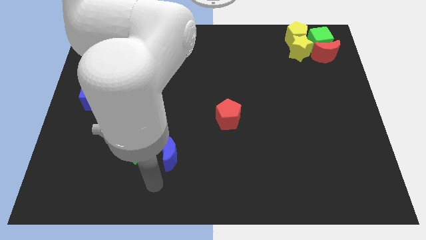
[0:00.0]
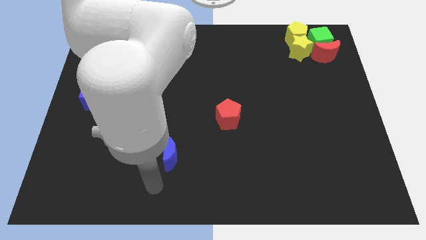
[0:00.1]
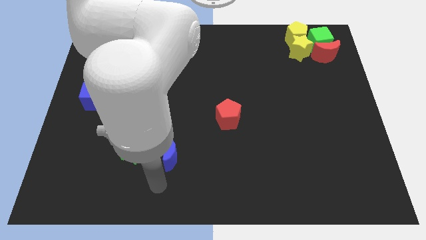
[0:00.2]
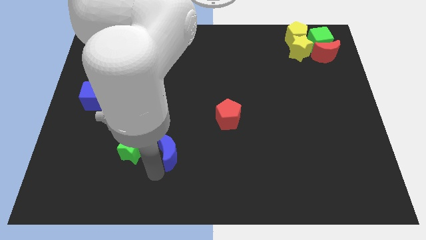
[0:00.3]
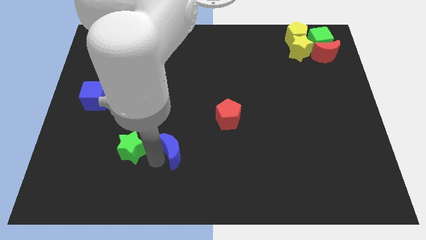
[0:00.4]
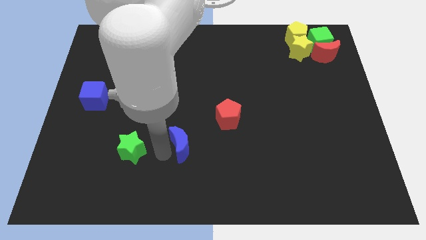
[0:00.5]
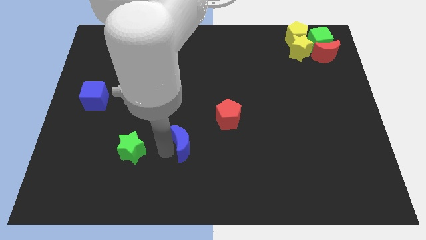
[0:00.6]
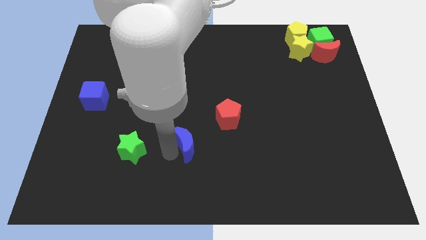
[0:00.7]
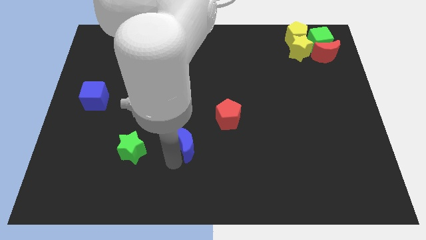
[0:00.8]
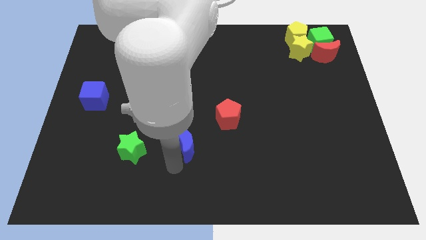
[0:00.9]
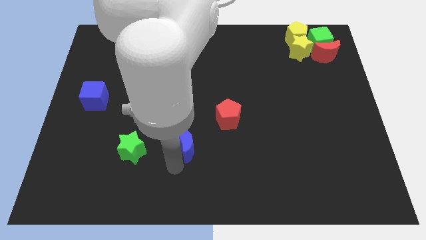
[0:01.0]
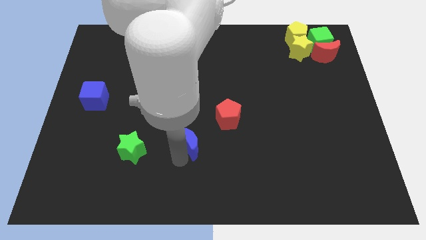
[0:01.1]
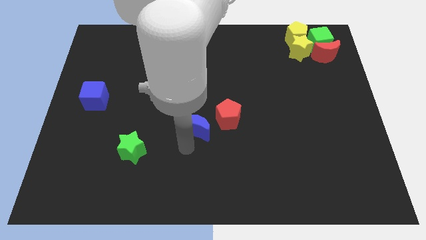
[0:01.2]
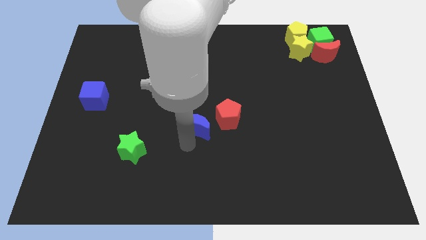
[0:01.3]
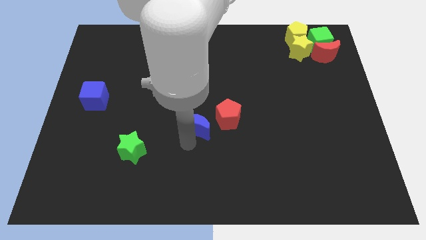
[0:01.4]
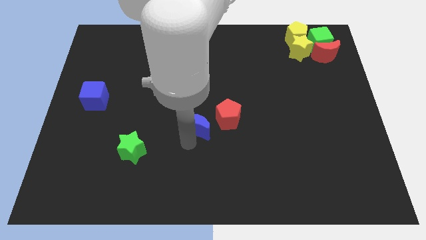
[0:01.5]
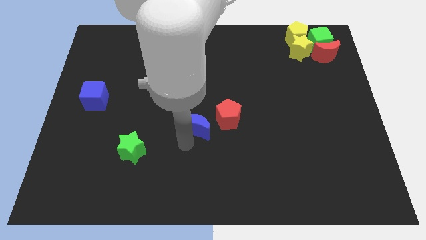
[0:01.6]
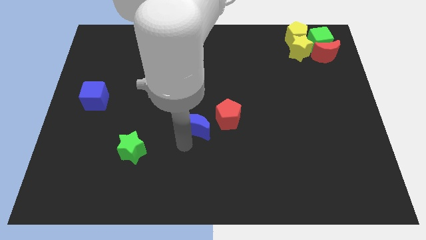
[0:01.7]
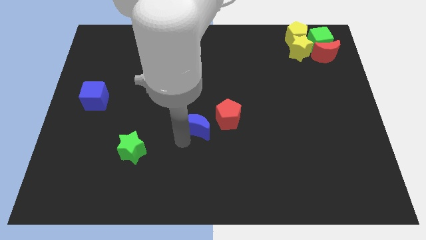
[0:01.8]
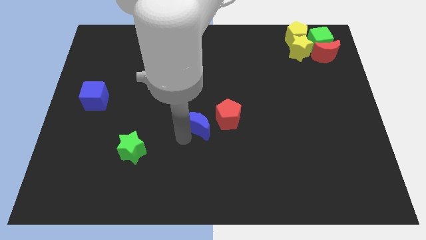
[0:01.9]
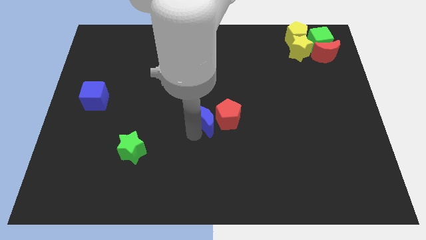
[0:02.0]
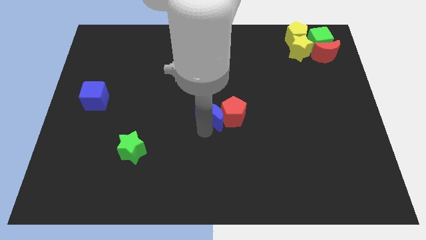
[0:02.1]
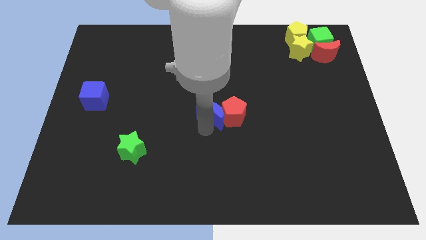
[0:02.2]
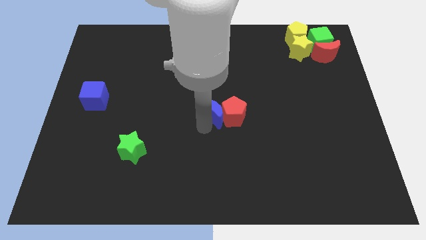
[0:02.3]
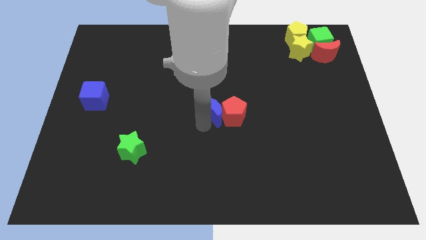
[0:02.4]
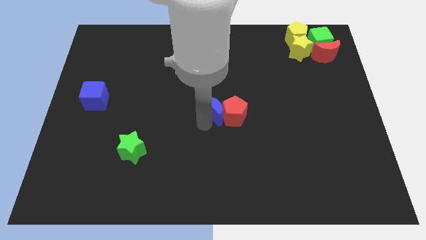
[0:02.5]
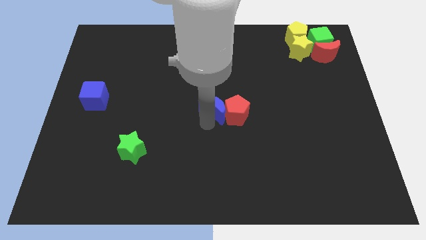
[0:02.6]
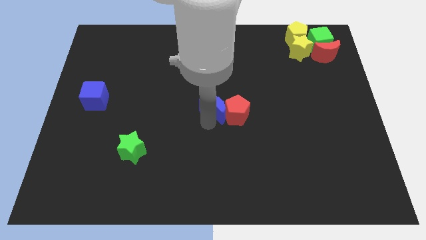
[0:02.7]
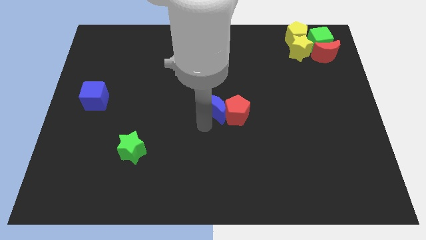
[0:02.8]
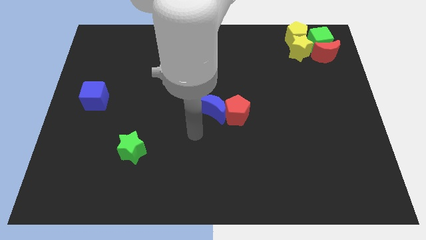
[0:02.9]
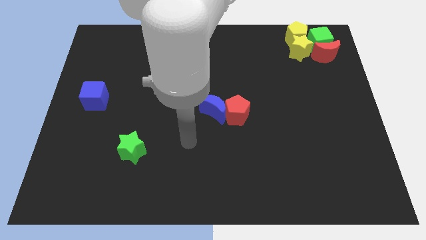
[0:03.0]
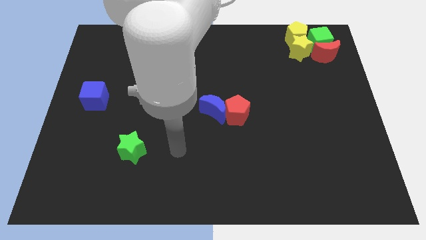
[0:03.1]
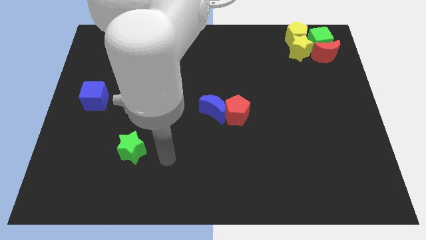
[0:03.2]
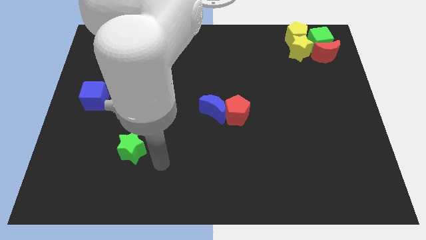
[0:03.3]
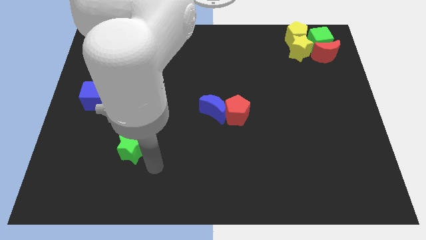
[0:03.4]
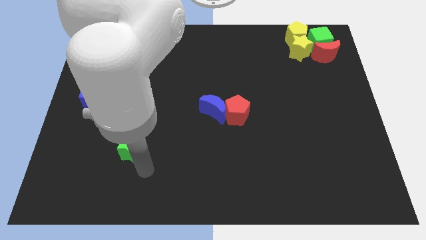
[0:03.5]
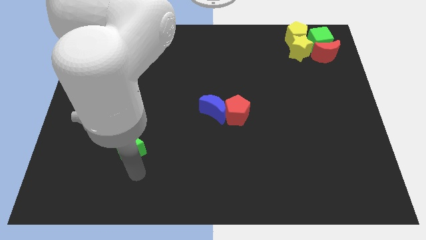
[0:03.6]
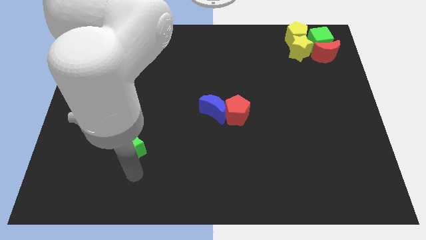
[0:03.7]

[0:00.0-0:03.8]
move the blue crescent into the red pentagon

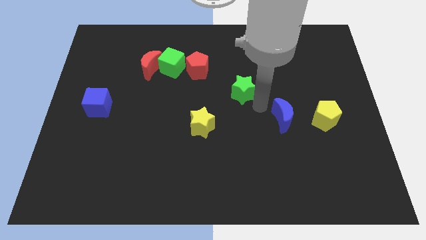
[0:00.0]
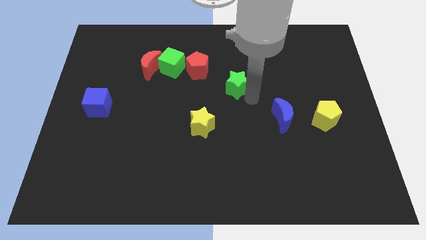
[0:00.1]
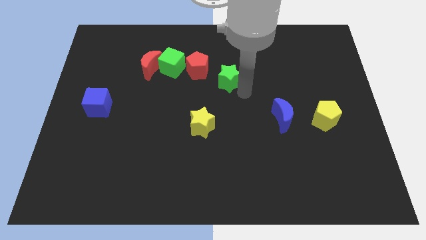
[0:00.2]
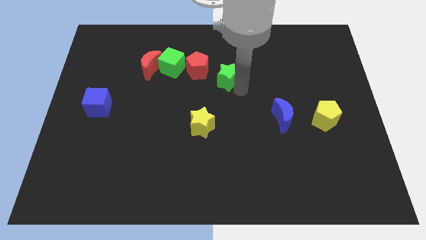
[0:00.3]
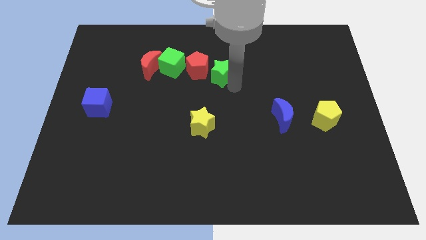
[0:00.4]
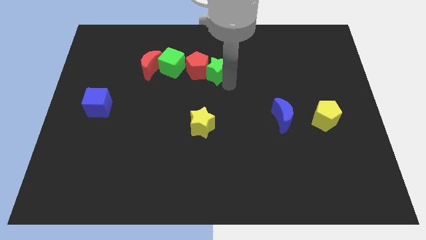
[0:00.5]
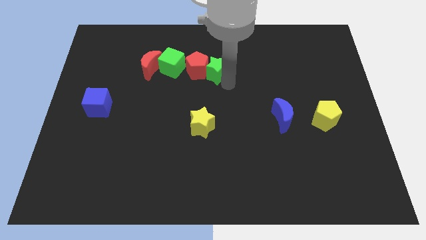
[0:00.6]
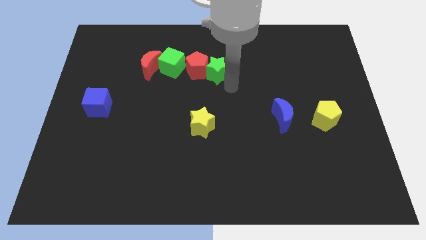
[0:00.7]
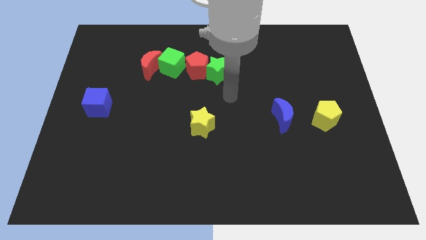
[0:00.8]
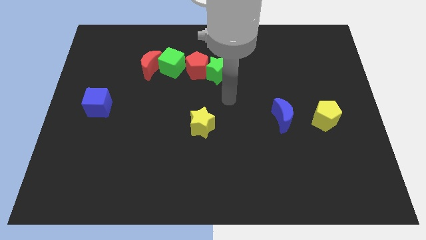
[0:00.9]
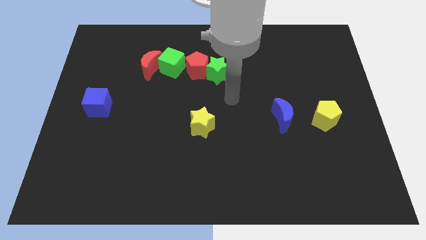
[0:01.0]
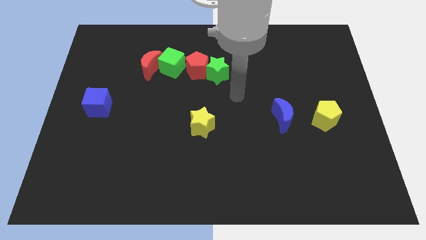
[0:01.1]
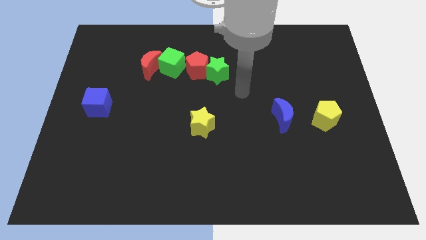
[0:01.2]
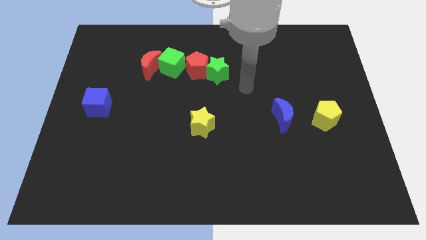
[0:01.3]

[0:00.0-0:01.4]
touch the red pentagon with the green star

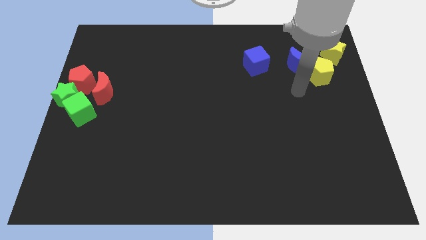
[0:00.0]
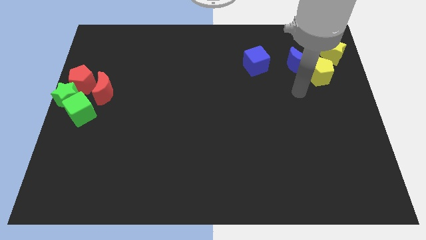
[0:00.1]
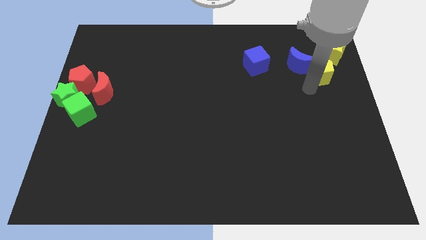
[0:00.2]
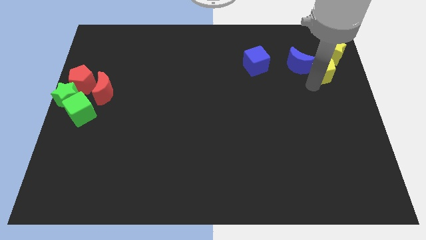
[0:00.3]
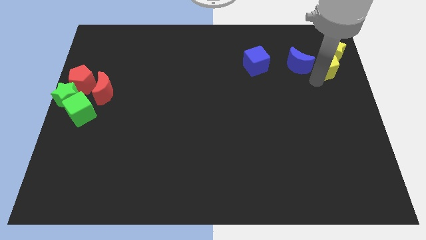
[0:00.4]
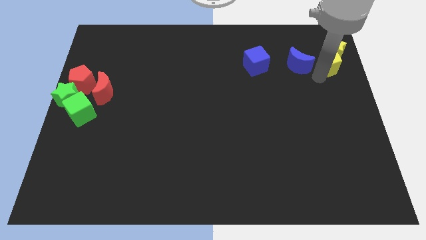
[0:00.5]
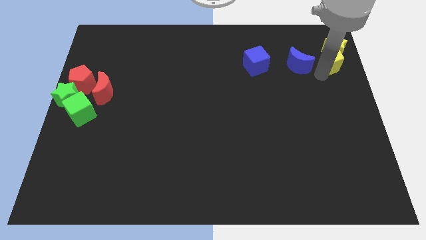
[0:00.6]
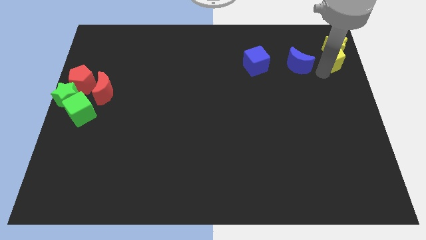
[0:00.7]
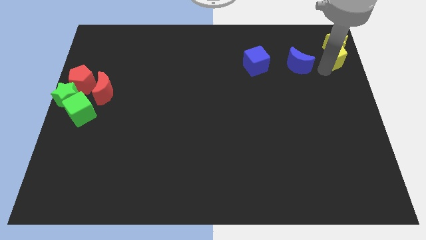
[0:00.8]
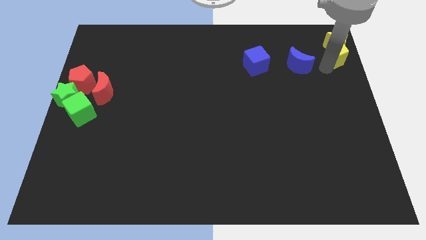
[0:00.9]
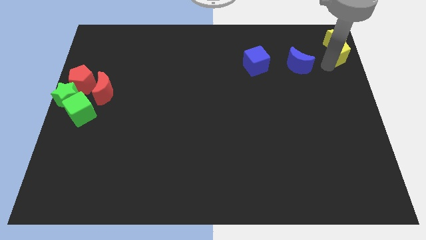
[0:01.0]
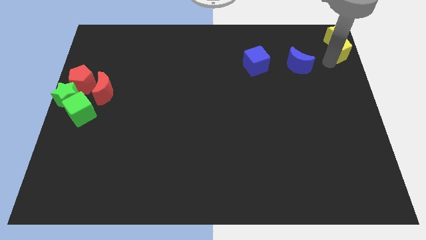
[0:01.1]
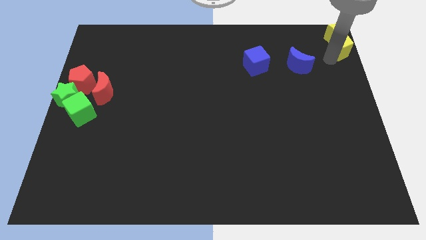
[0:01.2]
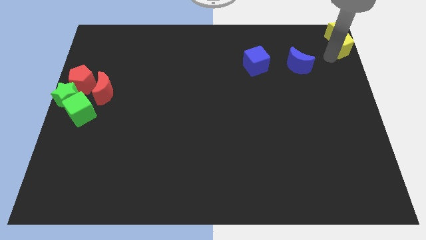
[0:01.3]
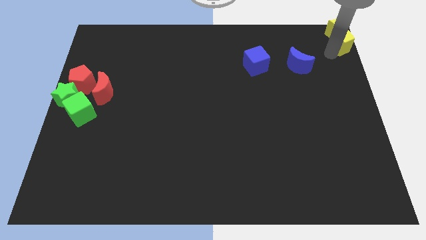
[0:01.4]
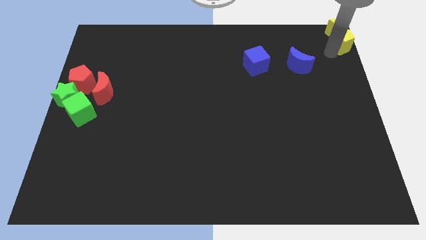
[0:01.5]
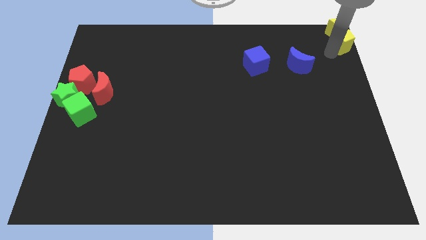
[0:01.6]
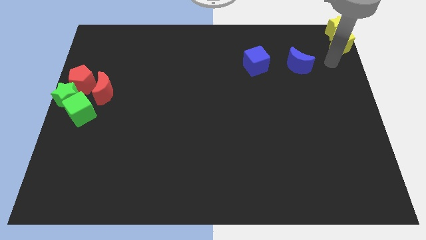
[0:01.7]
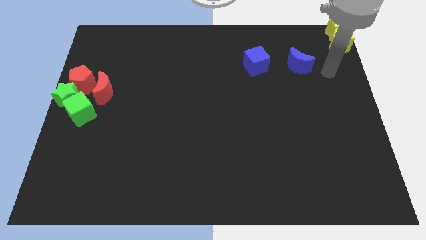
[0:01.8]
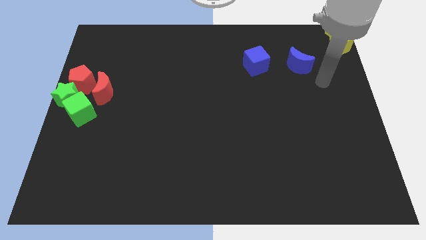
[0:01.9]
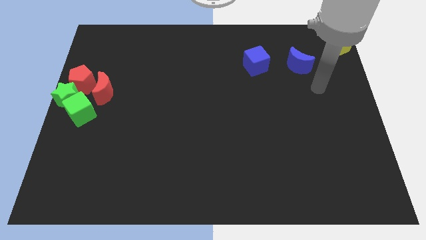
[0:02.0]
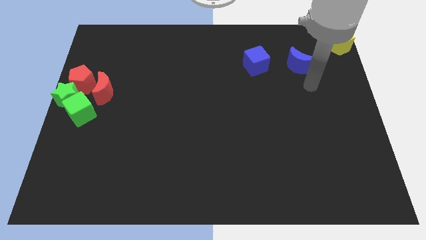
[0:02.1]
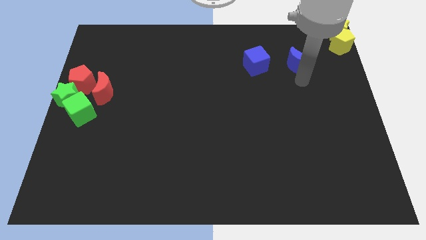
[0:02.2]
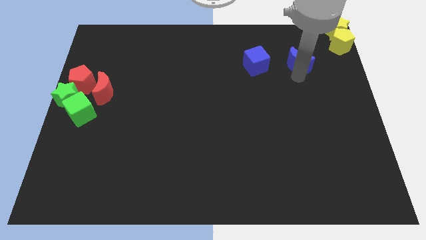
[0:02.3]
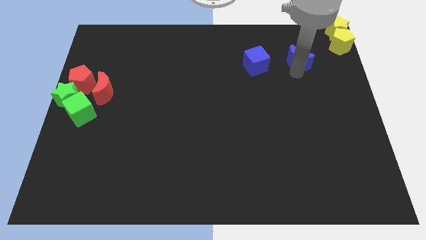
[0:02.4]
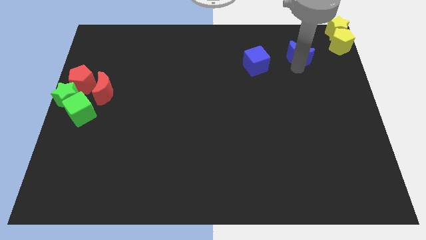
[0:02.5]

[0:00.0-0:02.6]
drag yellow blocks to top right corner

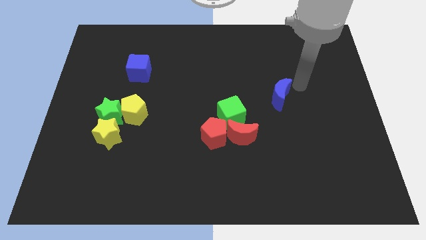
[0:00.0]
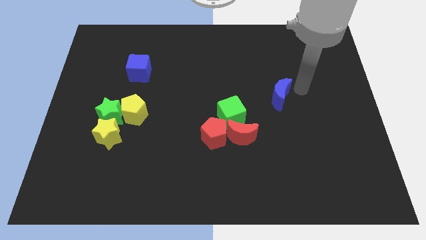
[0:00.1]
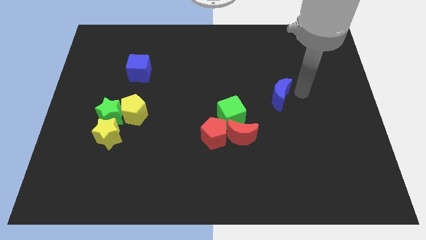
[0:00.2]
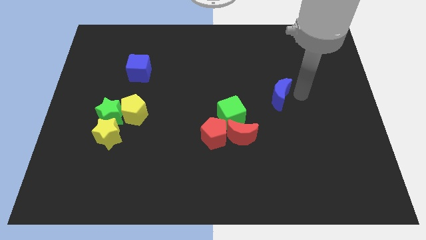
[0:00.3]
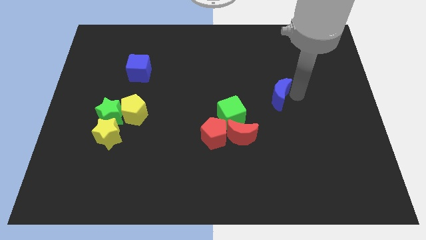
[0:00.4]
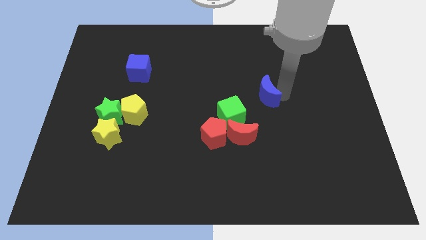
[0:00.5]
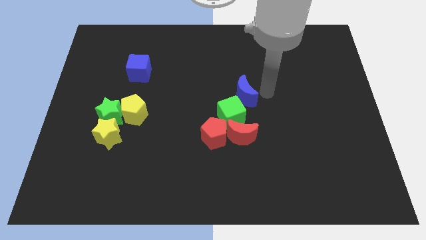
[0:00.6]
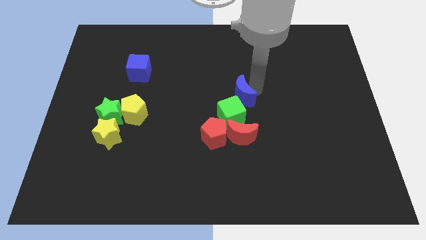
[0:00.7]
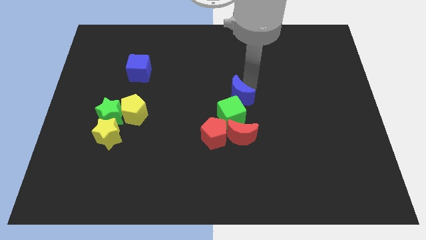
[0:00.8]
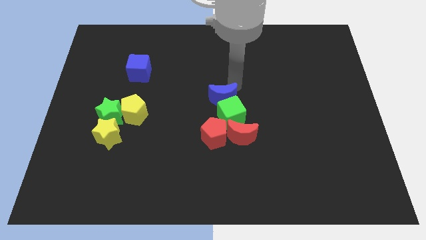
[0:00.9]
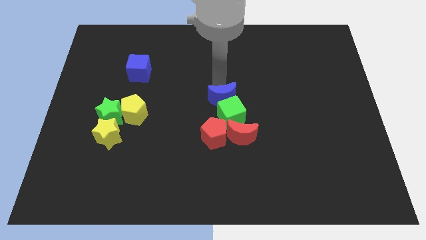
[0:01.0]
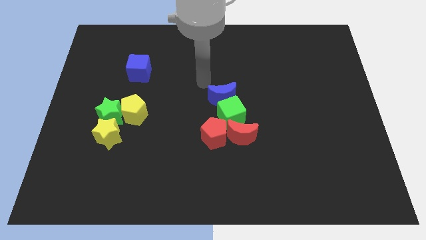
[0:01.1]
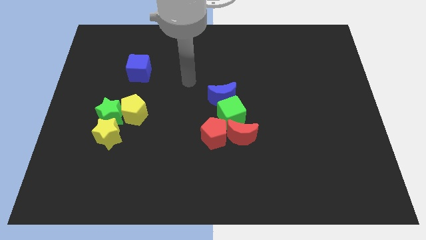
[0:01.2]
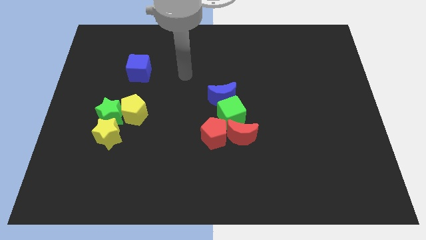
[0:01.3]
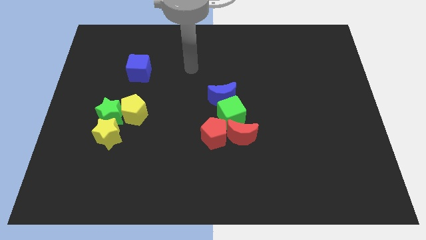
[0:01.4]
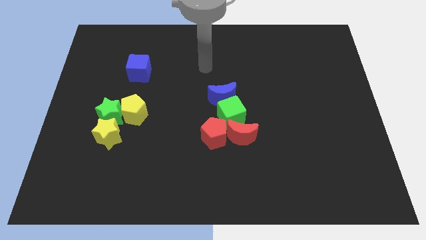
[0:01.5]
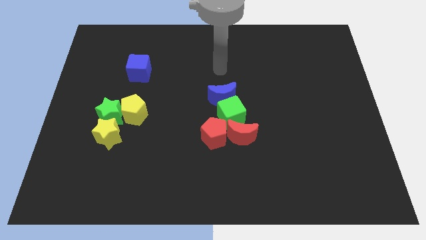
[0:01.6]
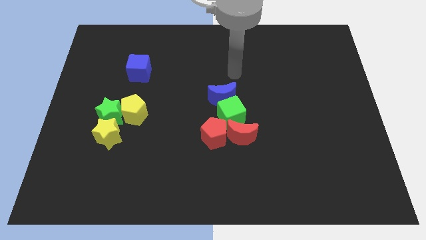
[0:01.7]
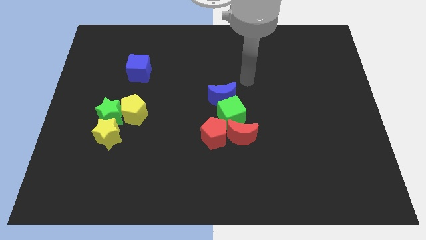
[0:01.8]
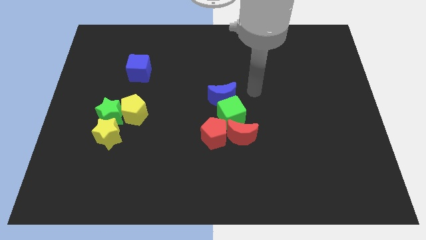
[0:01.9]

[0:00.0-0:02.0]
move the blue moon to the top of the green cube
